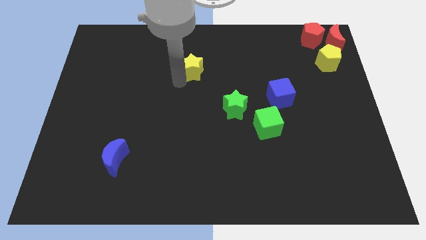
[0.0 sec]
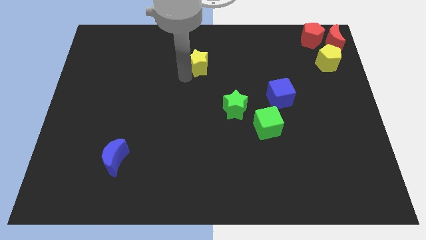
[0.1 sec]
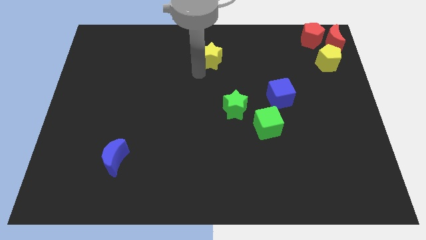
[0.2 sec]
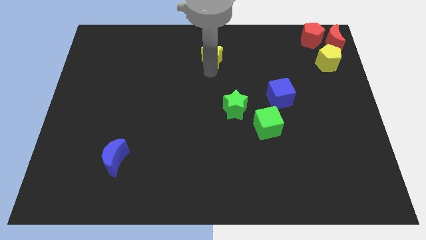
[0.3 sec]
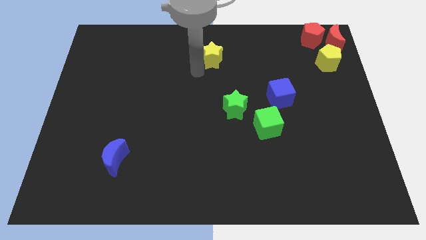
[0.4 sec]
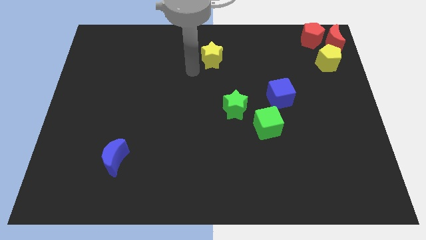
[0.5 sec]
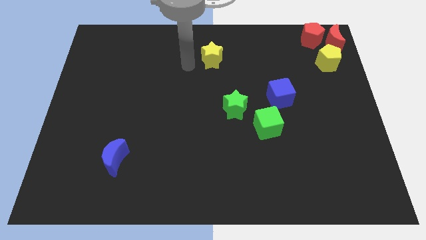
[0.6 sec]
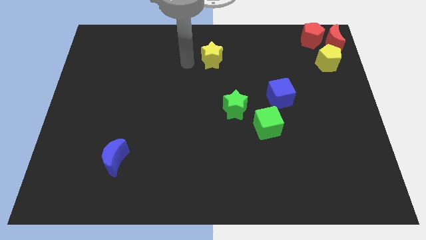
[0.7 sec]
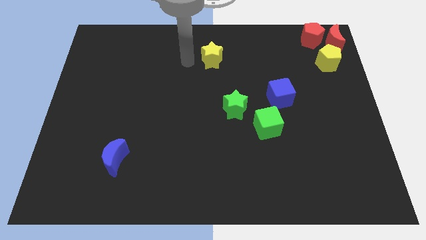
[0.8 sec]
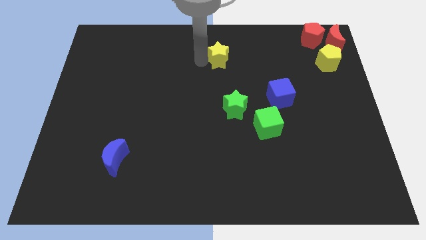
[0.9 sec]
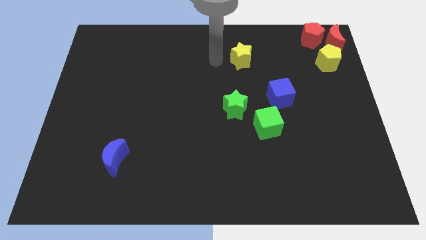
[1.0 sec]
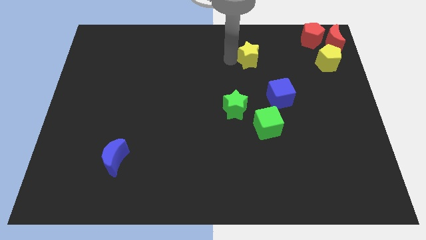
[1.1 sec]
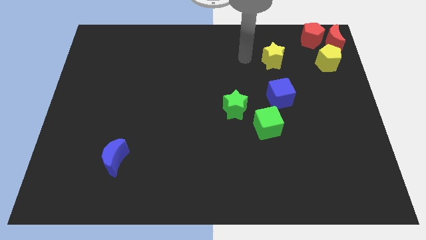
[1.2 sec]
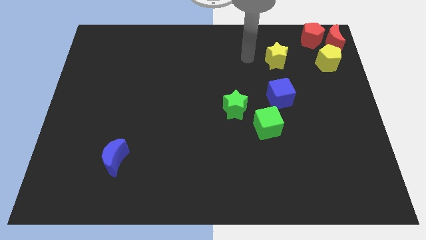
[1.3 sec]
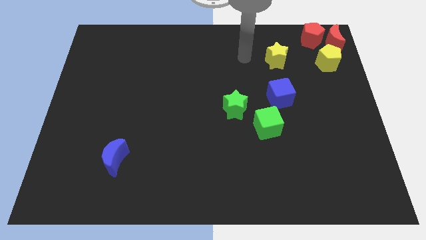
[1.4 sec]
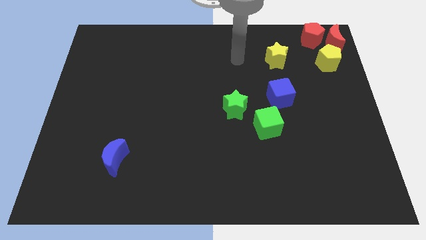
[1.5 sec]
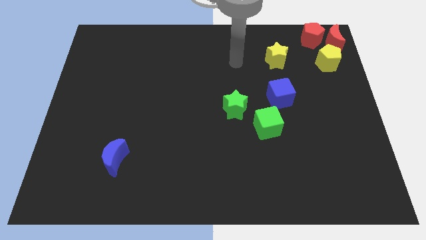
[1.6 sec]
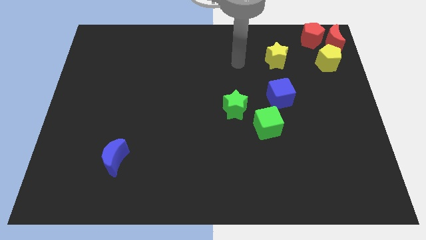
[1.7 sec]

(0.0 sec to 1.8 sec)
put the yellow star above the blue cube

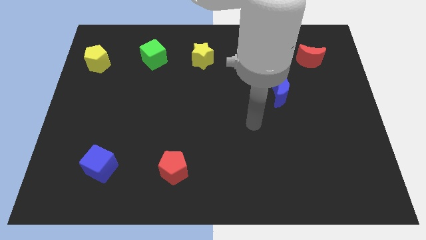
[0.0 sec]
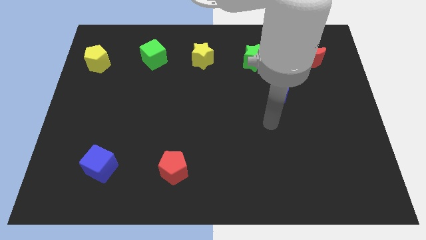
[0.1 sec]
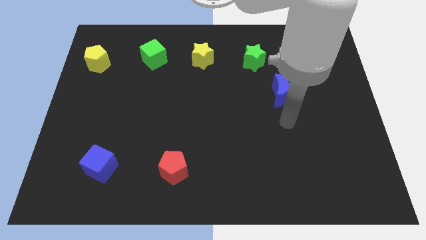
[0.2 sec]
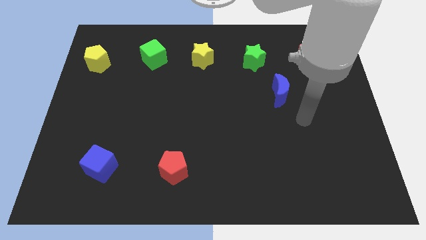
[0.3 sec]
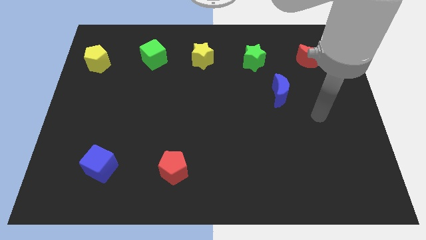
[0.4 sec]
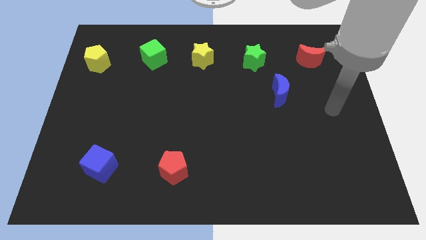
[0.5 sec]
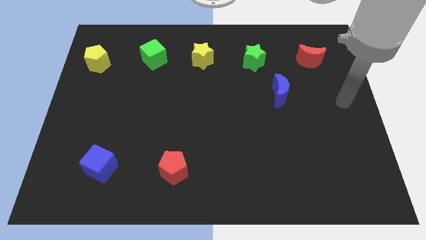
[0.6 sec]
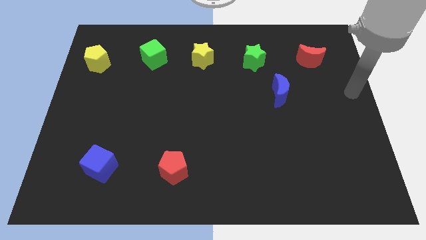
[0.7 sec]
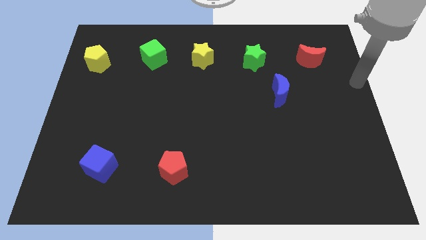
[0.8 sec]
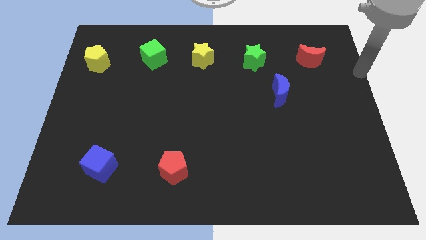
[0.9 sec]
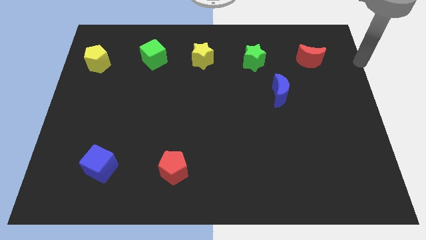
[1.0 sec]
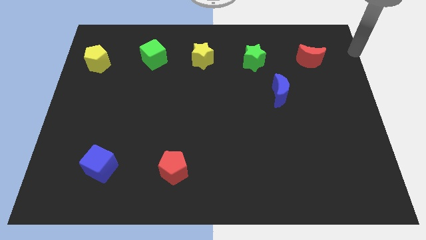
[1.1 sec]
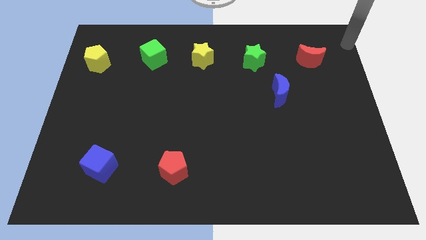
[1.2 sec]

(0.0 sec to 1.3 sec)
place your arm at the top right corner

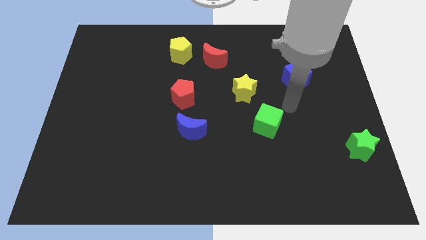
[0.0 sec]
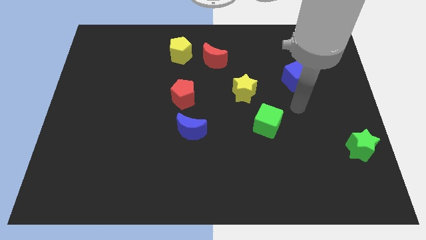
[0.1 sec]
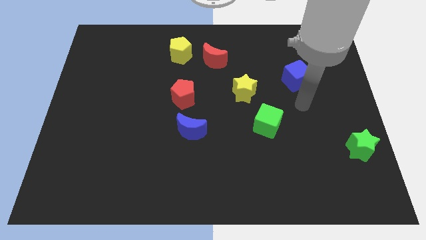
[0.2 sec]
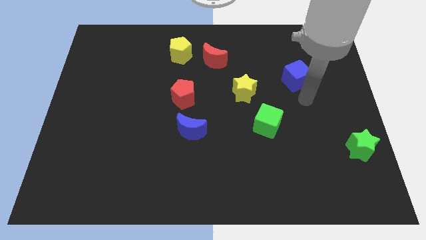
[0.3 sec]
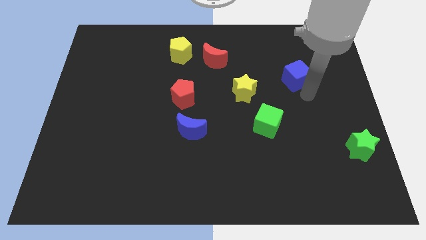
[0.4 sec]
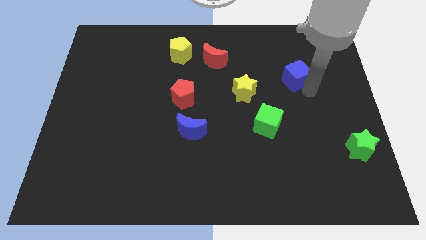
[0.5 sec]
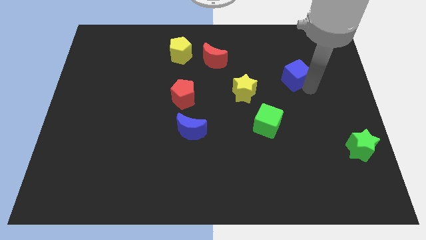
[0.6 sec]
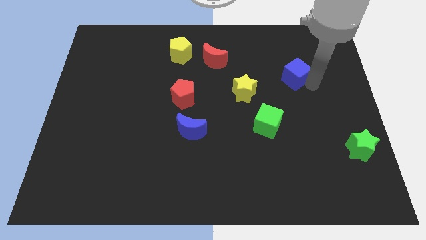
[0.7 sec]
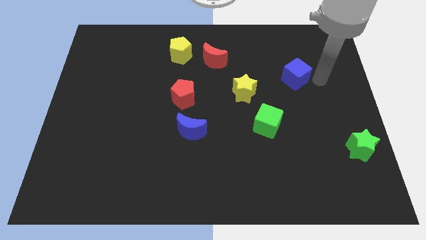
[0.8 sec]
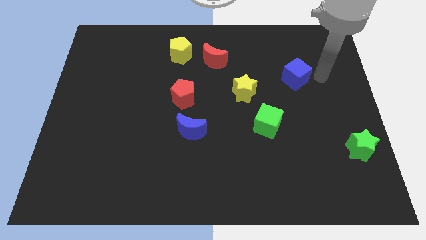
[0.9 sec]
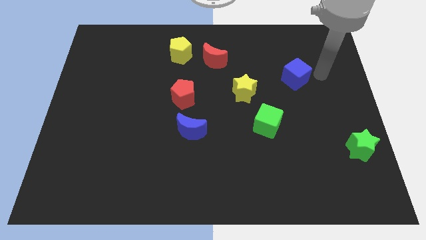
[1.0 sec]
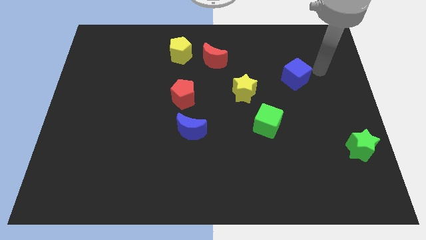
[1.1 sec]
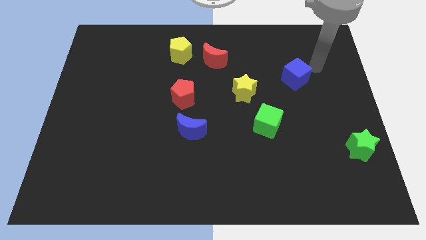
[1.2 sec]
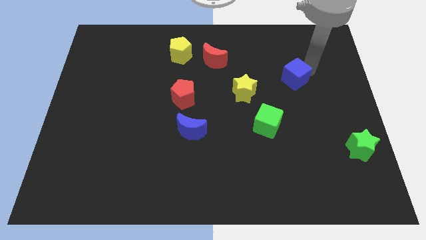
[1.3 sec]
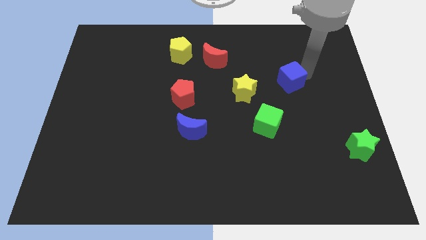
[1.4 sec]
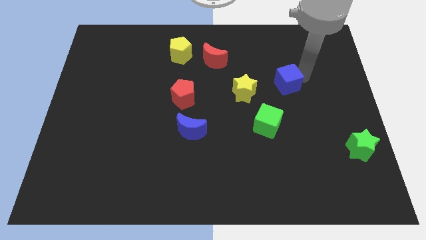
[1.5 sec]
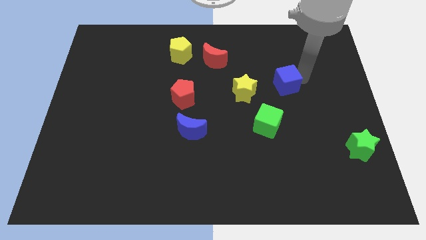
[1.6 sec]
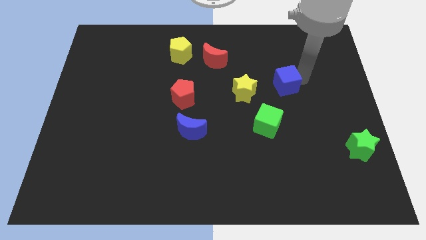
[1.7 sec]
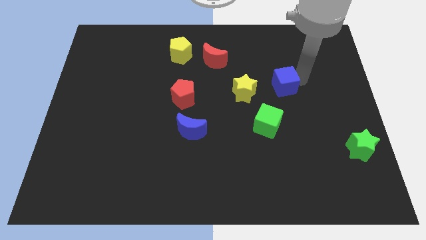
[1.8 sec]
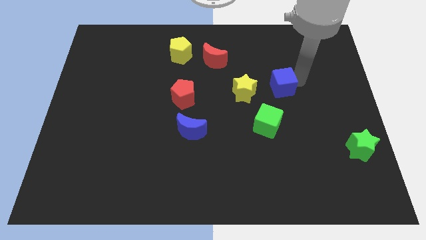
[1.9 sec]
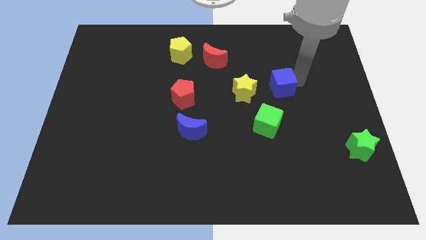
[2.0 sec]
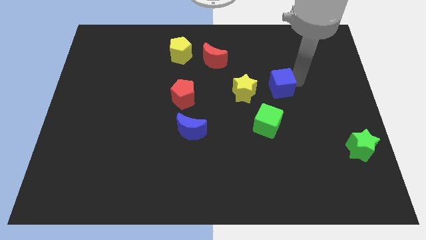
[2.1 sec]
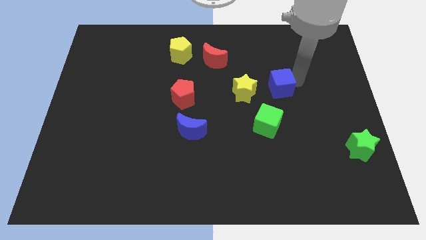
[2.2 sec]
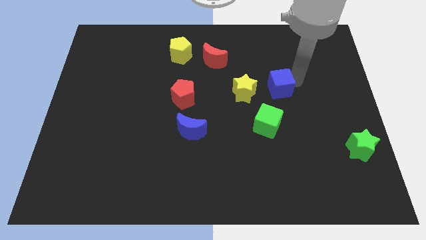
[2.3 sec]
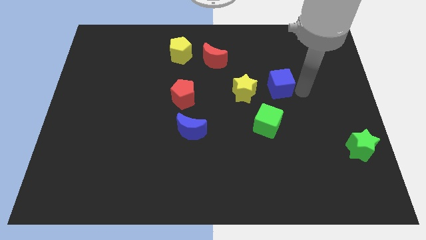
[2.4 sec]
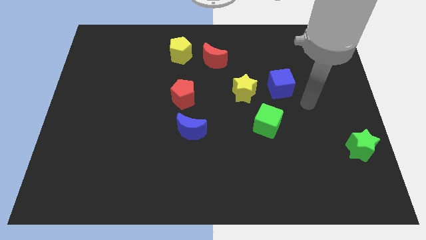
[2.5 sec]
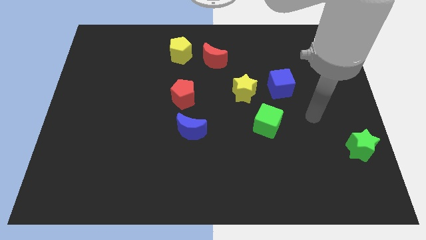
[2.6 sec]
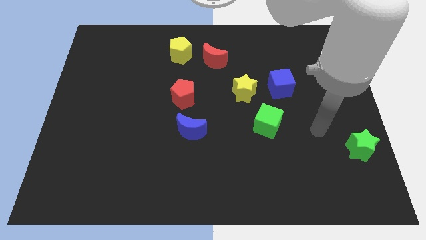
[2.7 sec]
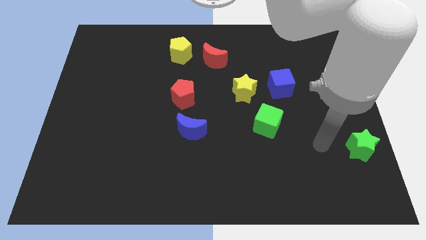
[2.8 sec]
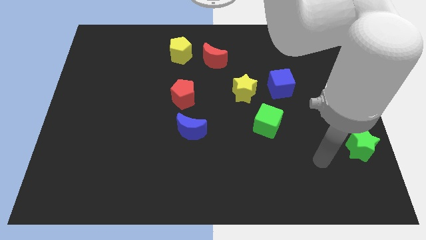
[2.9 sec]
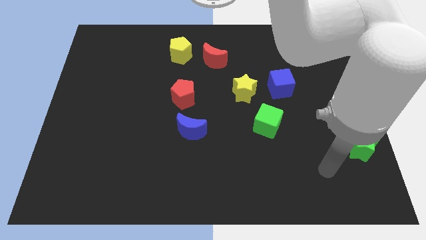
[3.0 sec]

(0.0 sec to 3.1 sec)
move the blue cube slightly to the left

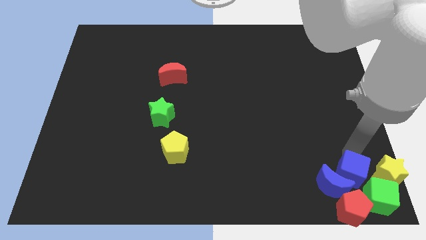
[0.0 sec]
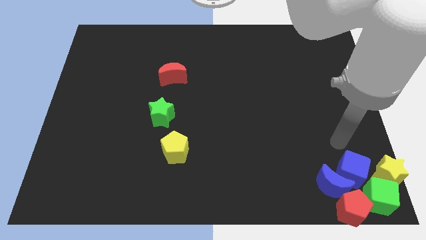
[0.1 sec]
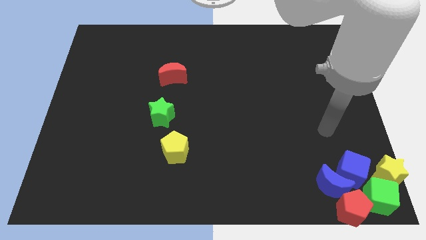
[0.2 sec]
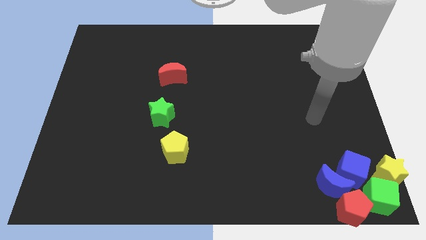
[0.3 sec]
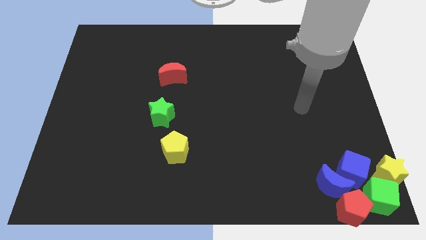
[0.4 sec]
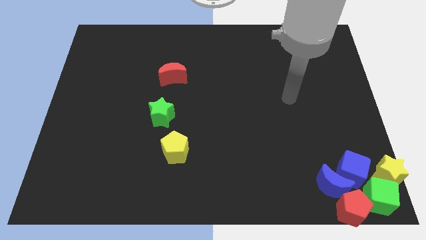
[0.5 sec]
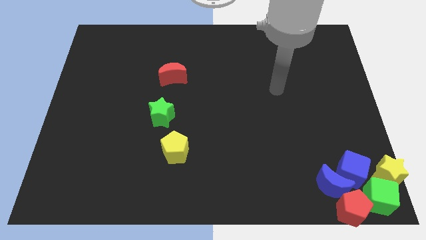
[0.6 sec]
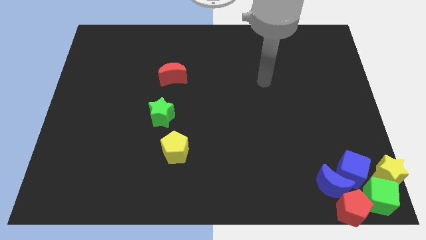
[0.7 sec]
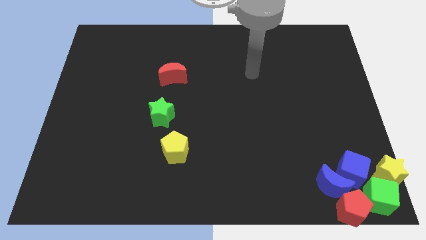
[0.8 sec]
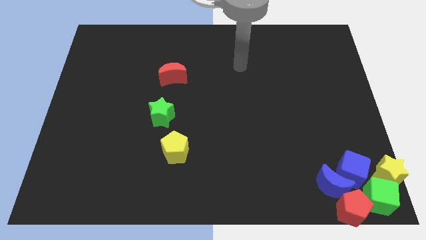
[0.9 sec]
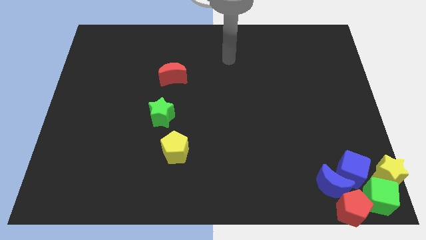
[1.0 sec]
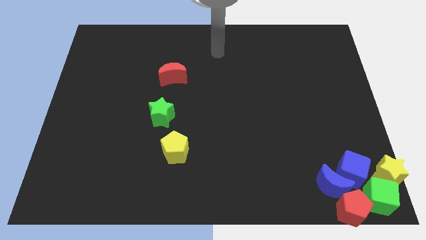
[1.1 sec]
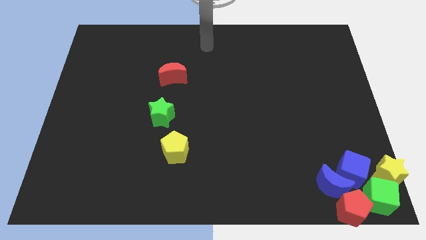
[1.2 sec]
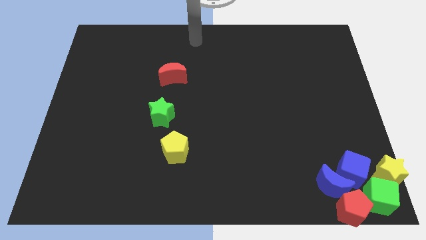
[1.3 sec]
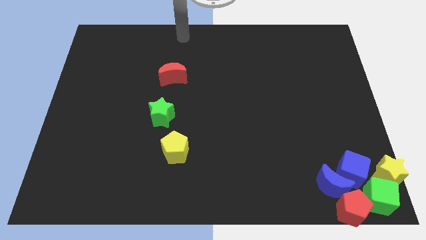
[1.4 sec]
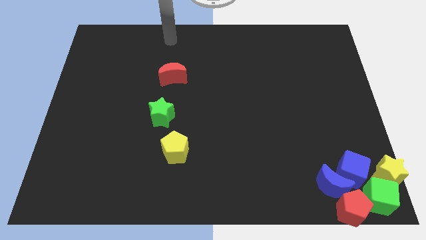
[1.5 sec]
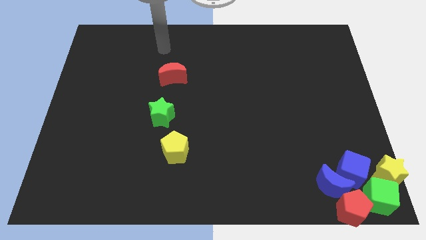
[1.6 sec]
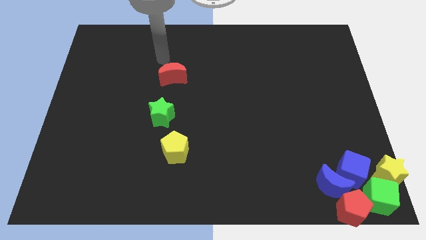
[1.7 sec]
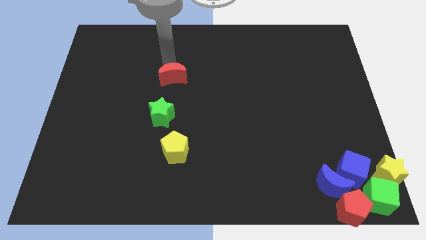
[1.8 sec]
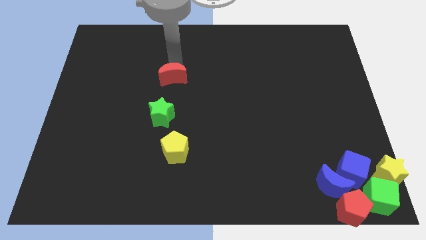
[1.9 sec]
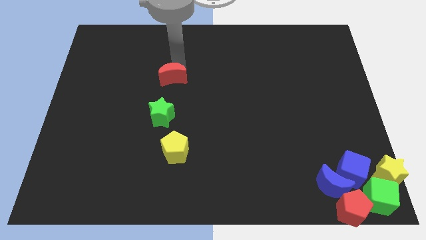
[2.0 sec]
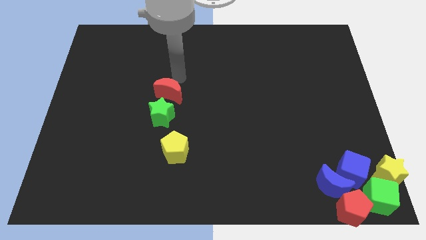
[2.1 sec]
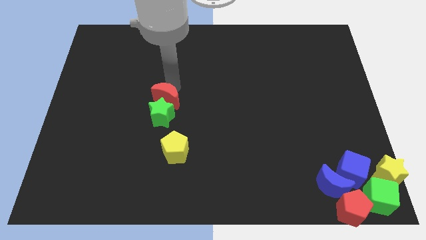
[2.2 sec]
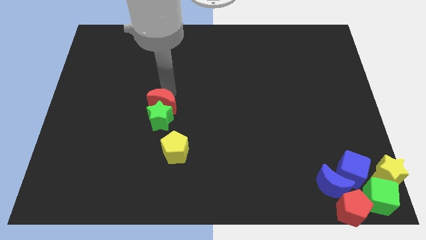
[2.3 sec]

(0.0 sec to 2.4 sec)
push the red moon into the green star

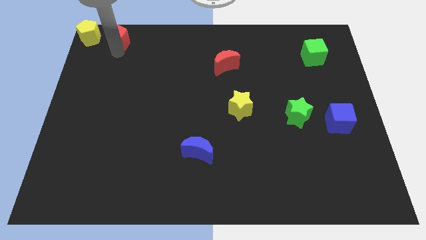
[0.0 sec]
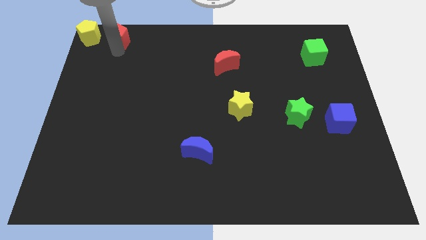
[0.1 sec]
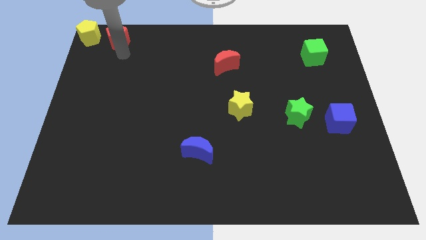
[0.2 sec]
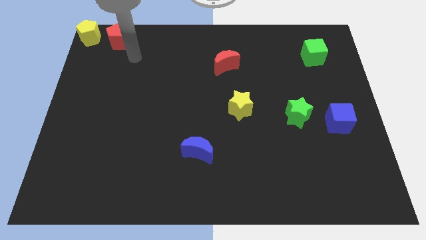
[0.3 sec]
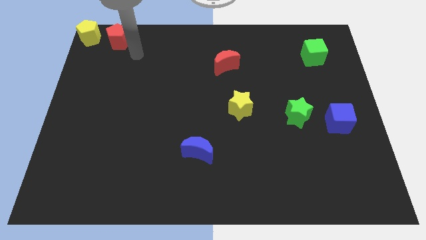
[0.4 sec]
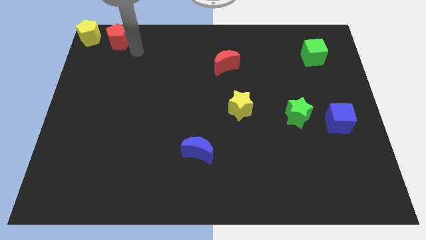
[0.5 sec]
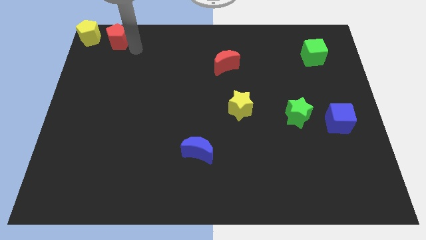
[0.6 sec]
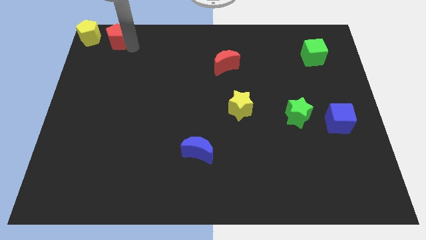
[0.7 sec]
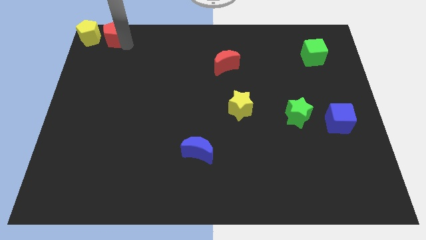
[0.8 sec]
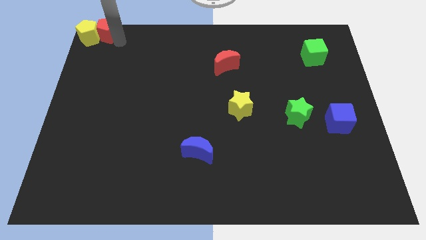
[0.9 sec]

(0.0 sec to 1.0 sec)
push the red pentagon into yellow pentagon
